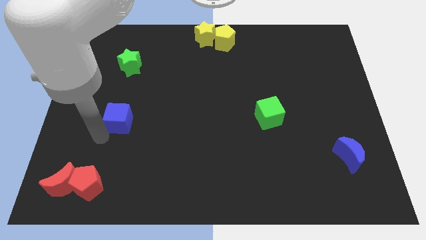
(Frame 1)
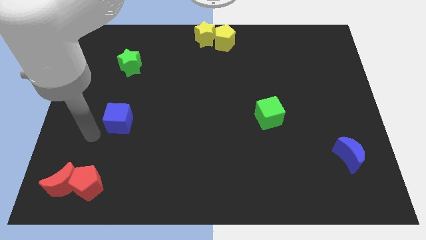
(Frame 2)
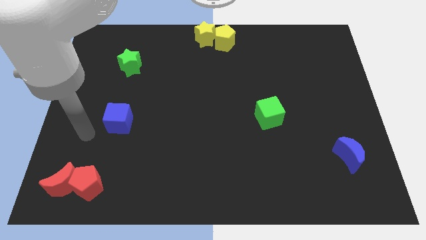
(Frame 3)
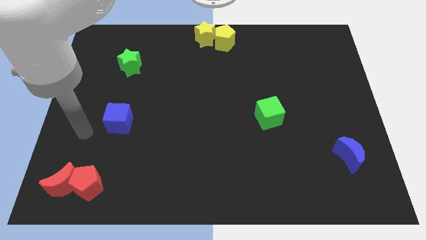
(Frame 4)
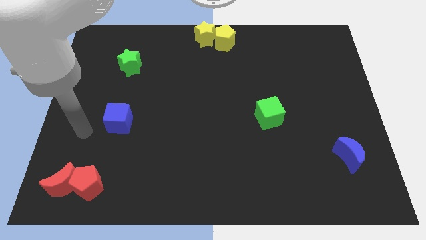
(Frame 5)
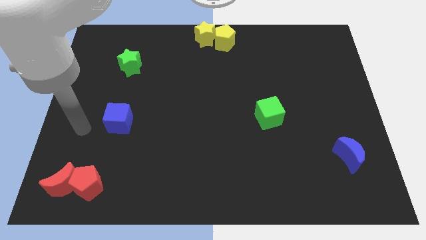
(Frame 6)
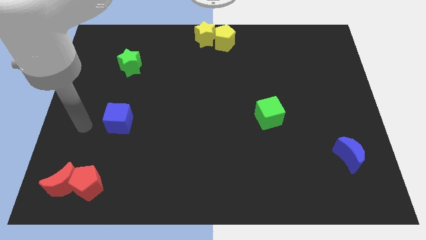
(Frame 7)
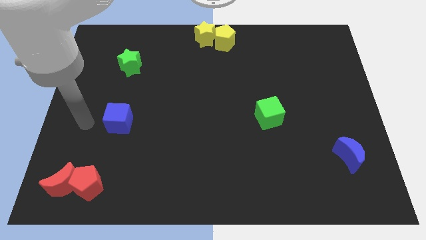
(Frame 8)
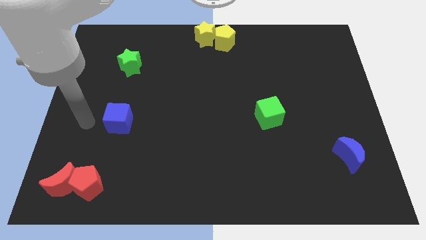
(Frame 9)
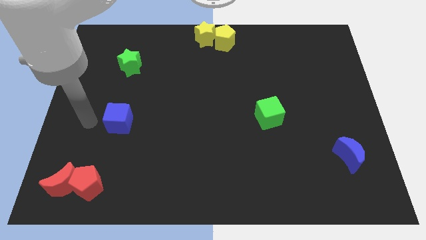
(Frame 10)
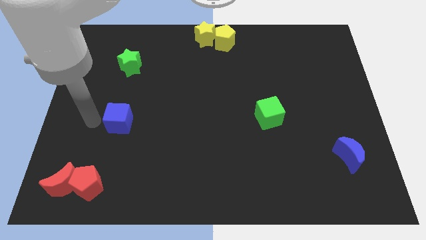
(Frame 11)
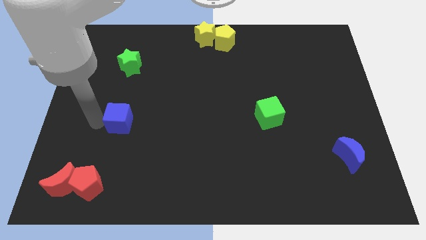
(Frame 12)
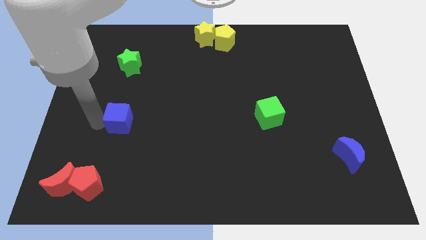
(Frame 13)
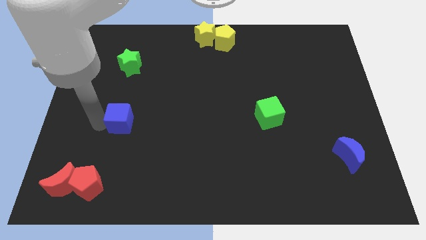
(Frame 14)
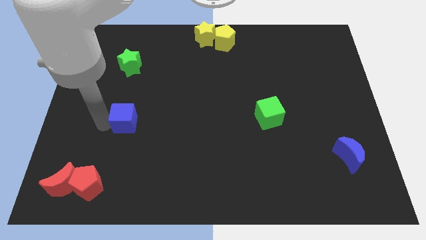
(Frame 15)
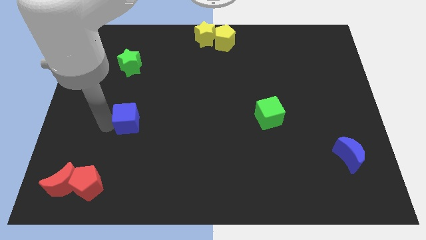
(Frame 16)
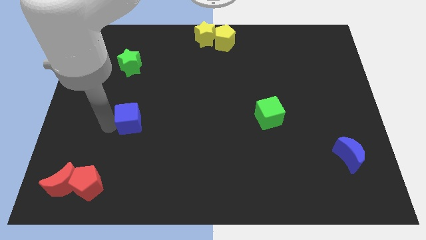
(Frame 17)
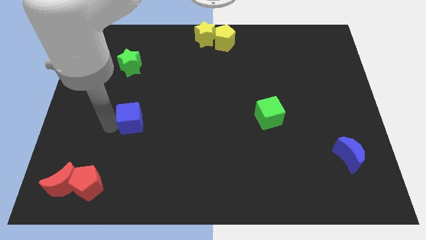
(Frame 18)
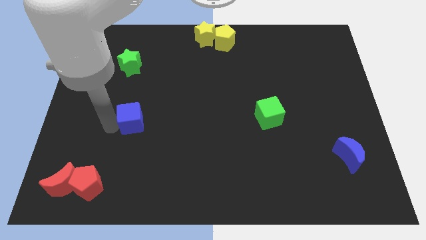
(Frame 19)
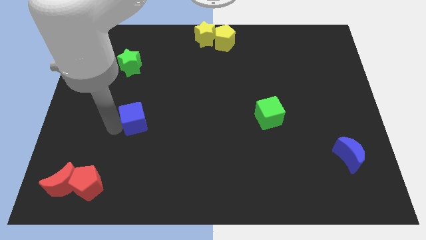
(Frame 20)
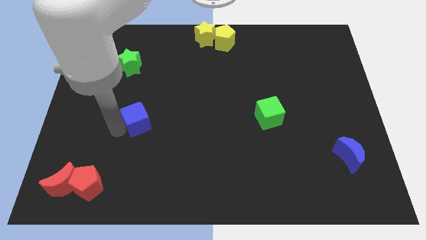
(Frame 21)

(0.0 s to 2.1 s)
push blue cube below green star

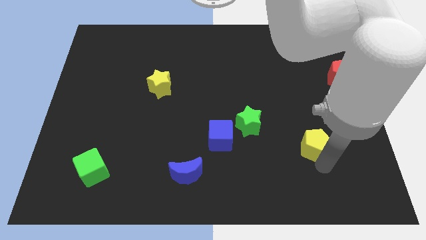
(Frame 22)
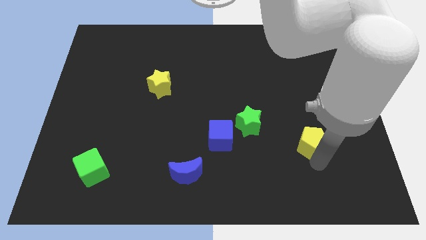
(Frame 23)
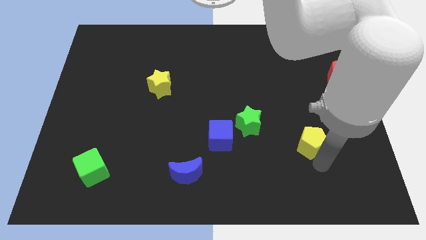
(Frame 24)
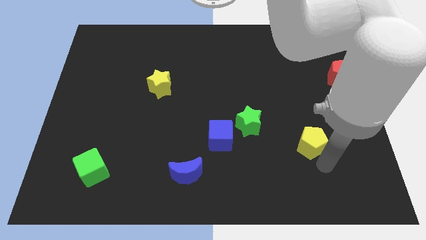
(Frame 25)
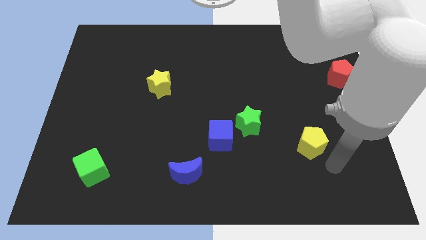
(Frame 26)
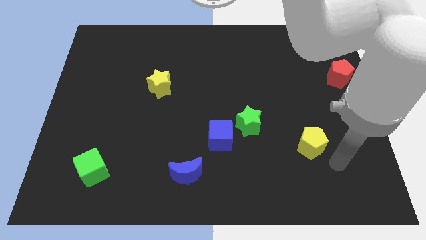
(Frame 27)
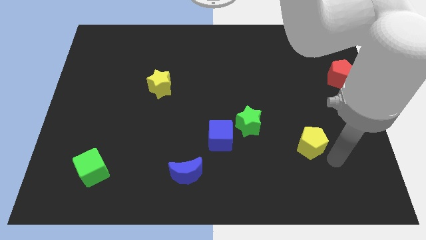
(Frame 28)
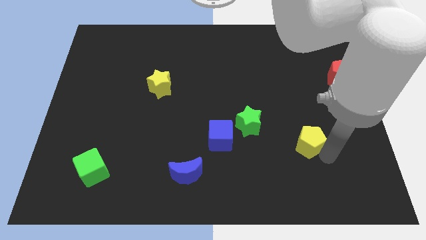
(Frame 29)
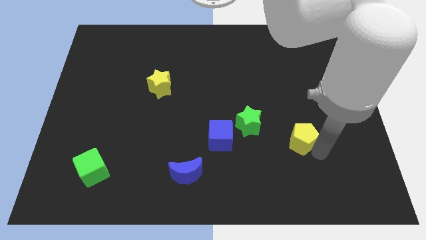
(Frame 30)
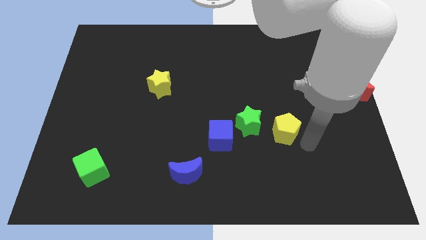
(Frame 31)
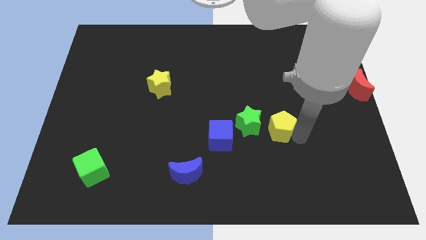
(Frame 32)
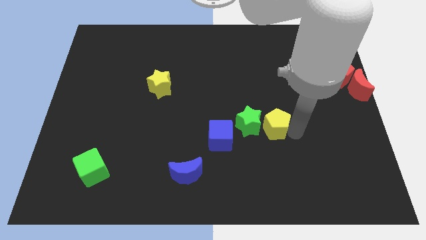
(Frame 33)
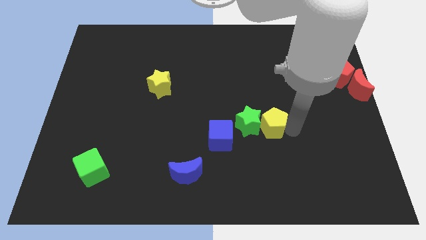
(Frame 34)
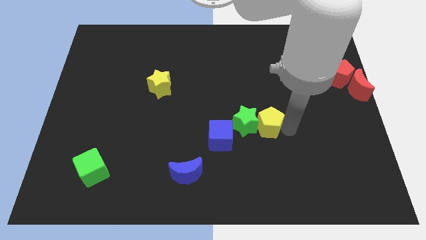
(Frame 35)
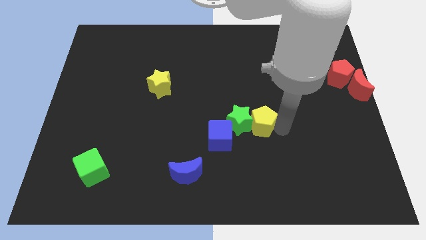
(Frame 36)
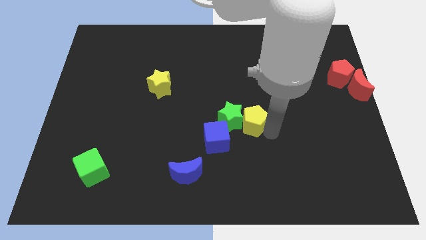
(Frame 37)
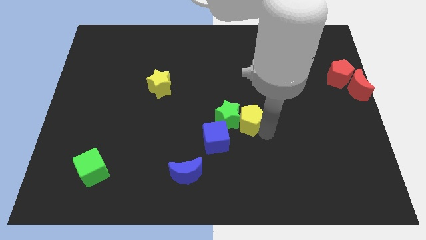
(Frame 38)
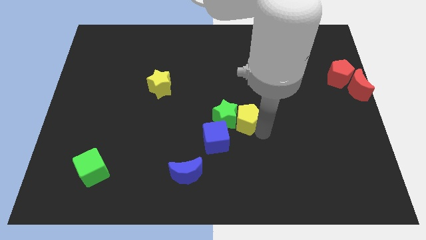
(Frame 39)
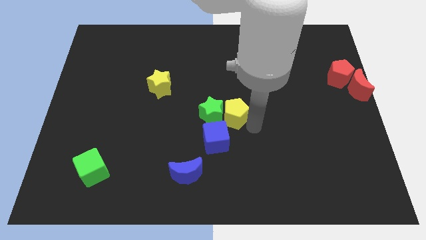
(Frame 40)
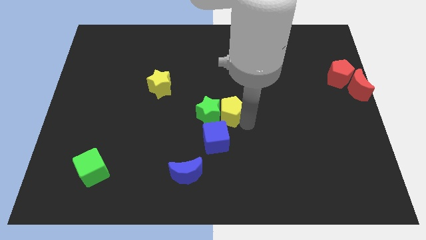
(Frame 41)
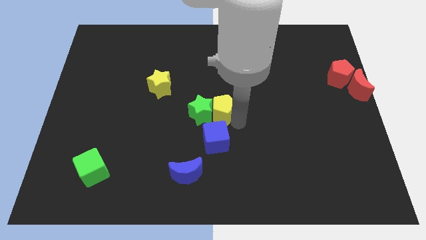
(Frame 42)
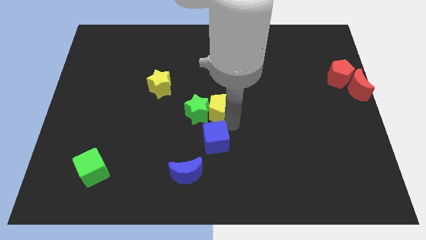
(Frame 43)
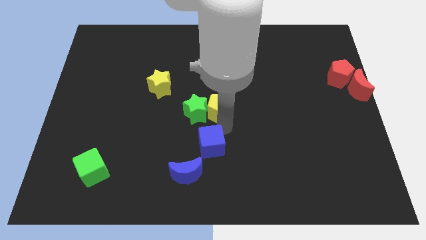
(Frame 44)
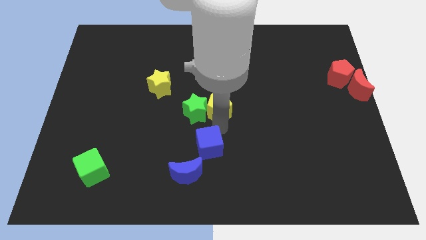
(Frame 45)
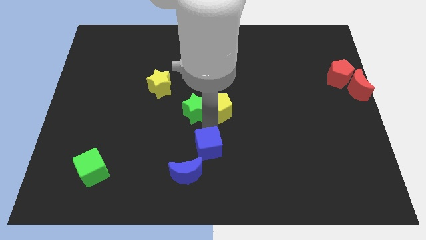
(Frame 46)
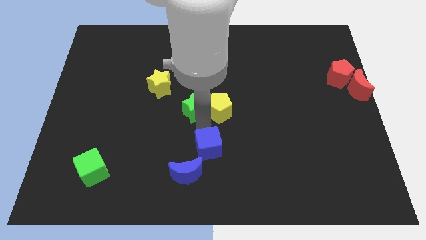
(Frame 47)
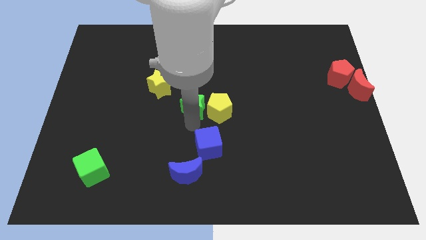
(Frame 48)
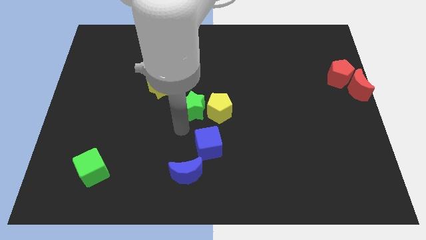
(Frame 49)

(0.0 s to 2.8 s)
move green star and yellow pentagon towards the center left

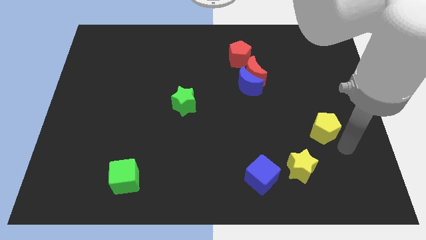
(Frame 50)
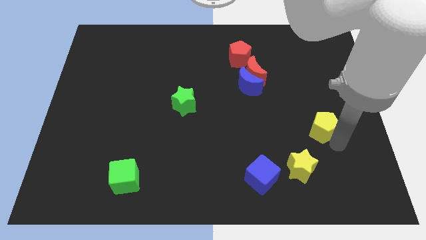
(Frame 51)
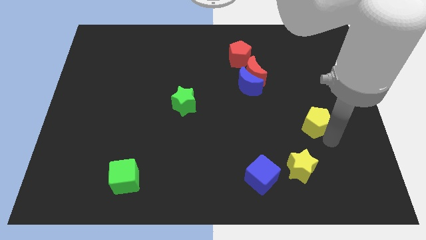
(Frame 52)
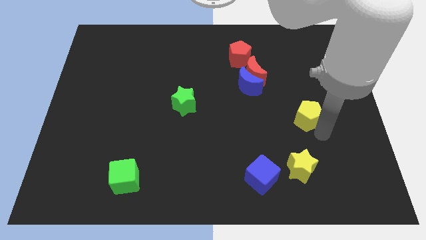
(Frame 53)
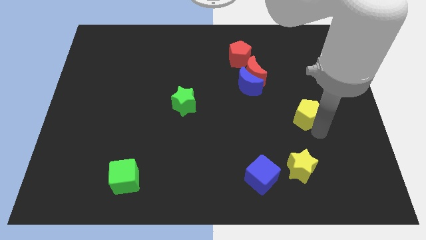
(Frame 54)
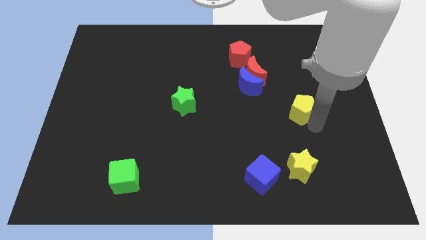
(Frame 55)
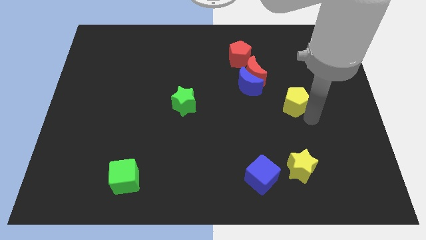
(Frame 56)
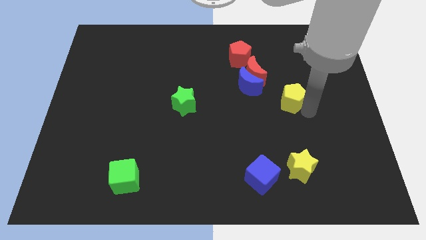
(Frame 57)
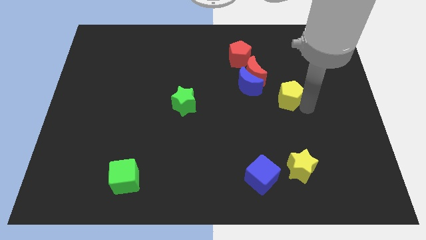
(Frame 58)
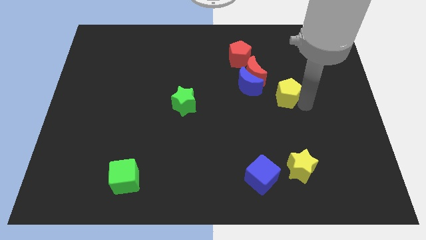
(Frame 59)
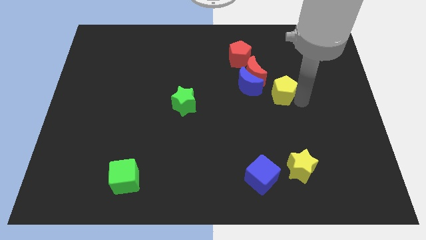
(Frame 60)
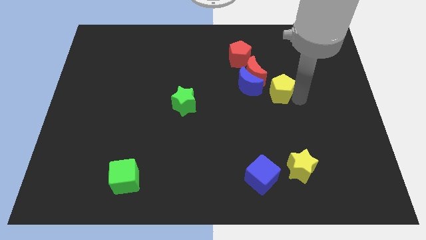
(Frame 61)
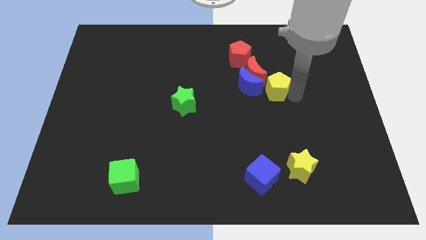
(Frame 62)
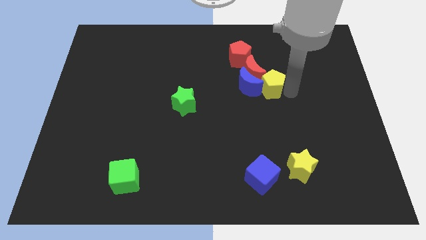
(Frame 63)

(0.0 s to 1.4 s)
place the yellow pentagon at the right of the blue moon

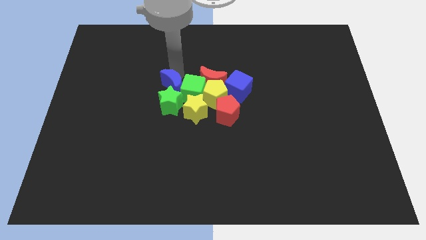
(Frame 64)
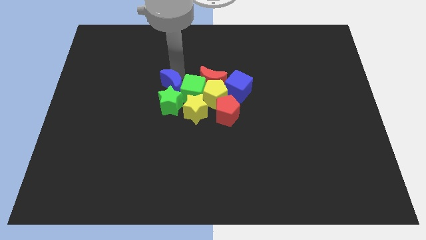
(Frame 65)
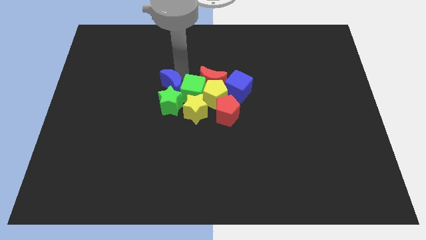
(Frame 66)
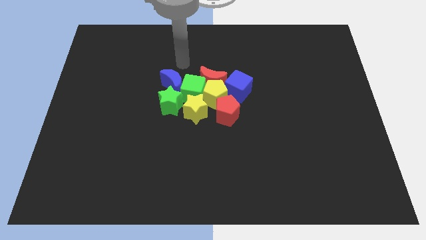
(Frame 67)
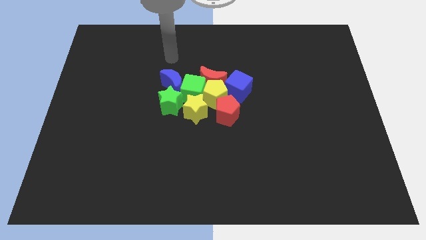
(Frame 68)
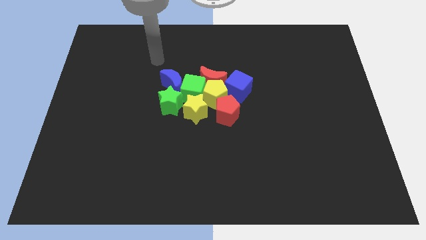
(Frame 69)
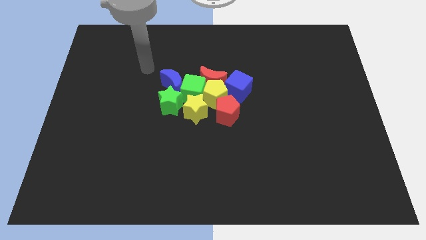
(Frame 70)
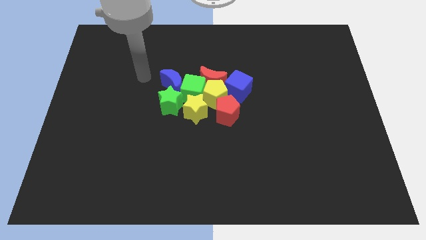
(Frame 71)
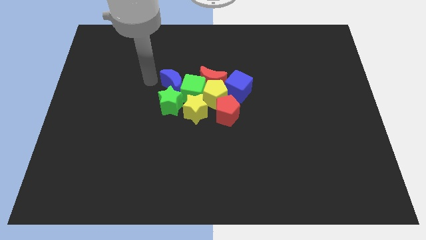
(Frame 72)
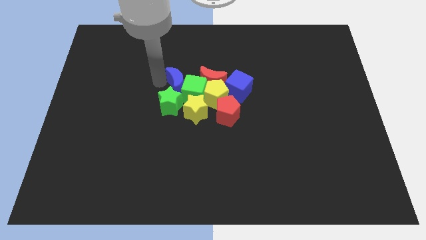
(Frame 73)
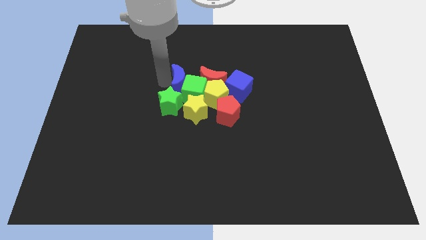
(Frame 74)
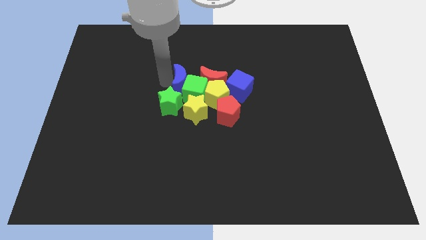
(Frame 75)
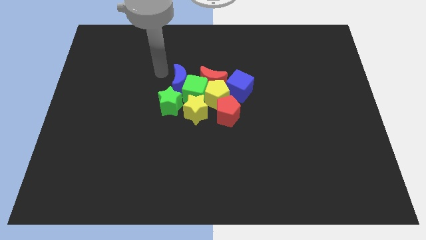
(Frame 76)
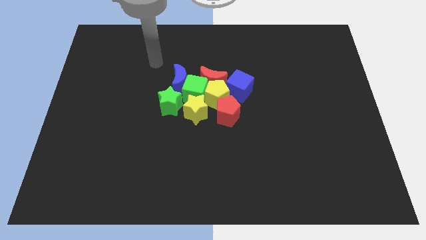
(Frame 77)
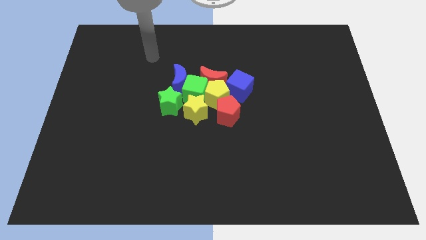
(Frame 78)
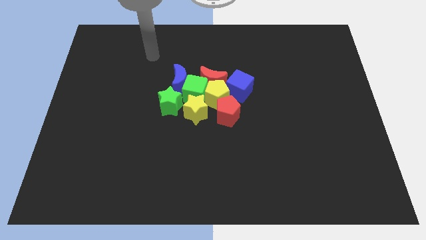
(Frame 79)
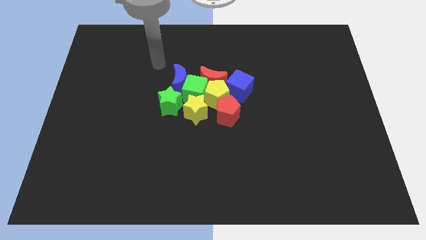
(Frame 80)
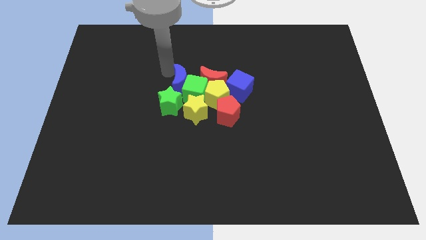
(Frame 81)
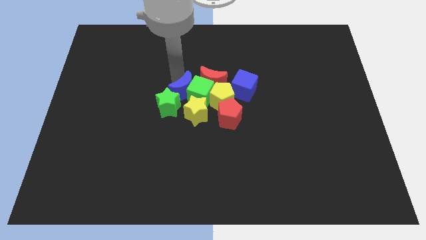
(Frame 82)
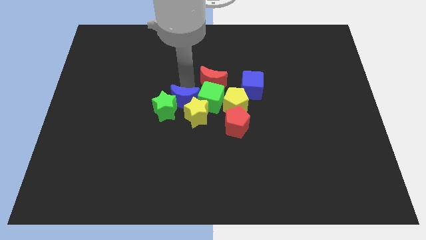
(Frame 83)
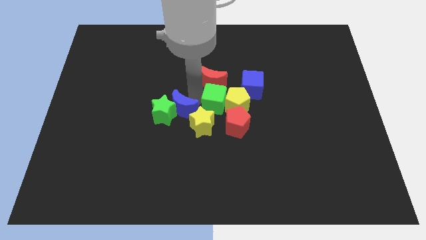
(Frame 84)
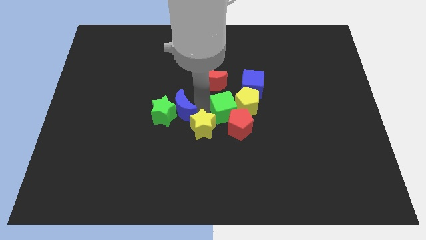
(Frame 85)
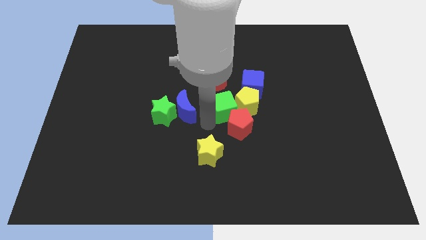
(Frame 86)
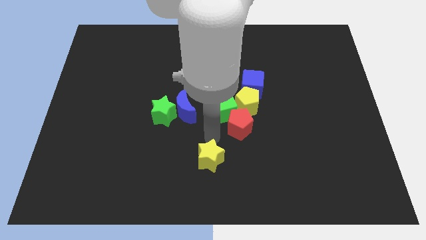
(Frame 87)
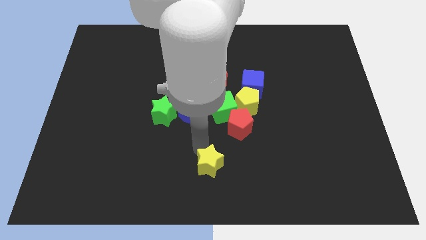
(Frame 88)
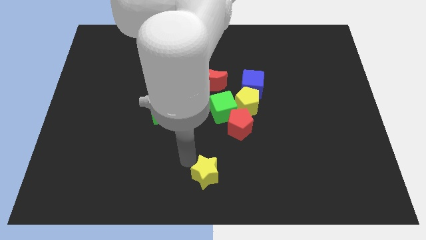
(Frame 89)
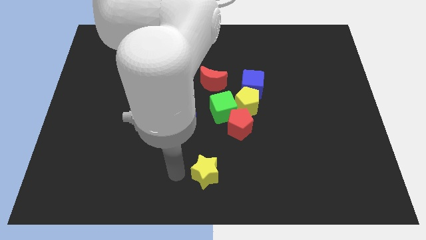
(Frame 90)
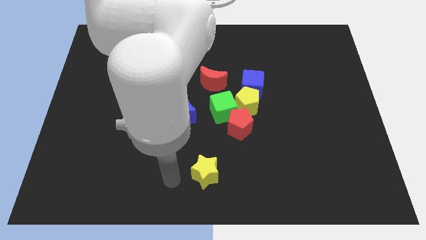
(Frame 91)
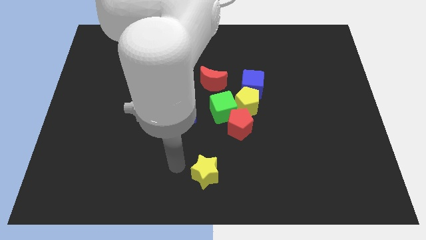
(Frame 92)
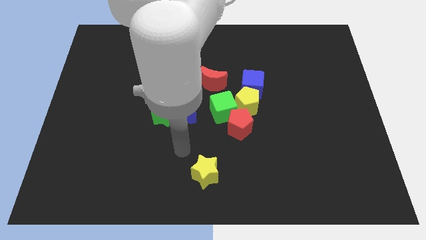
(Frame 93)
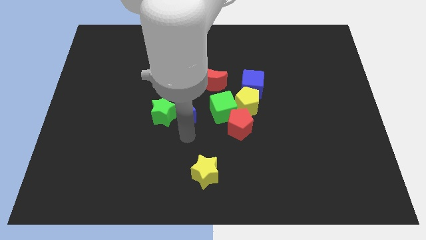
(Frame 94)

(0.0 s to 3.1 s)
separate group of blocks
